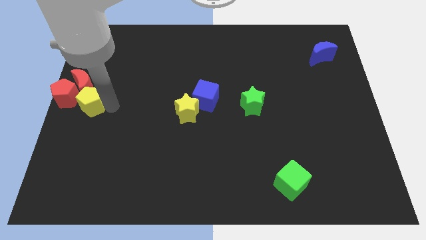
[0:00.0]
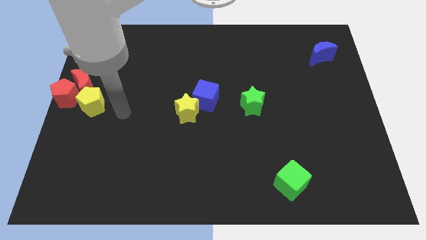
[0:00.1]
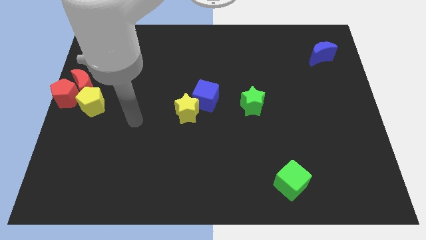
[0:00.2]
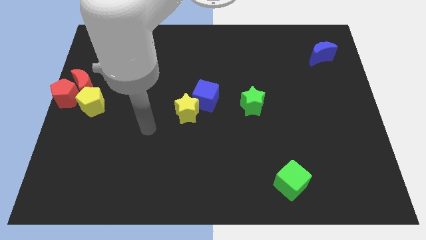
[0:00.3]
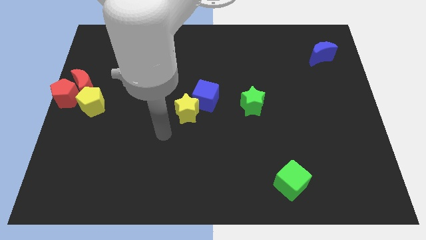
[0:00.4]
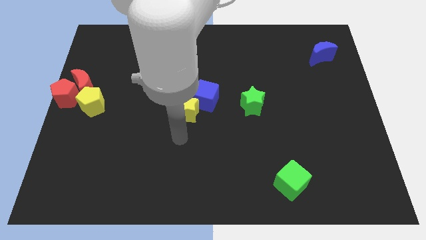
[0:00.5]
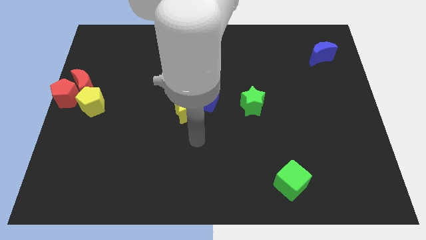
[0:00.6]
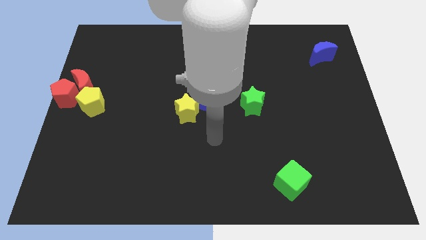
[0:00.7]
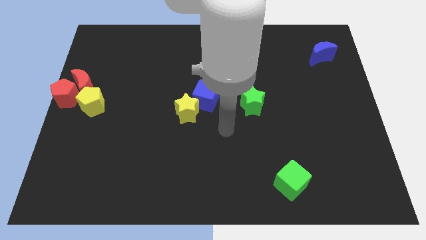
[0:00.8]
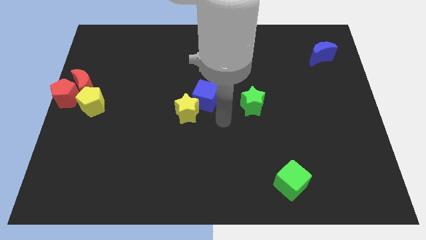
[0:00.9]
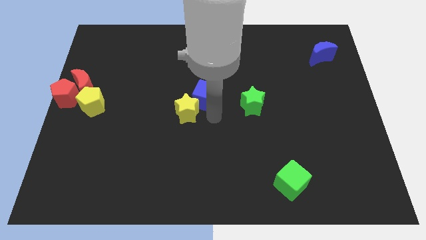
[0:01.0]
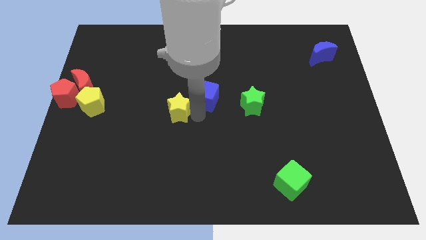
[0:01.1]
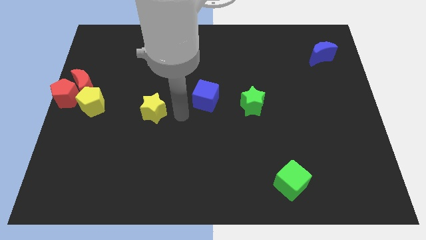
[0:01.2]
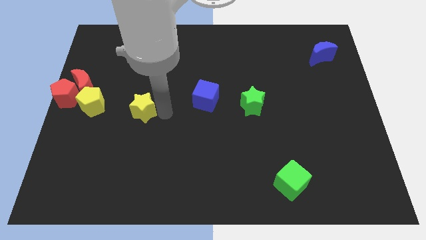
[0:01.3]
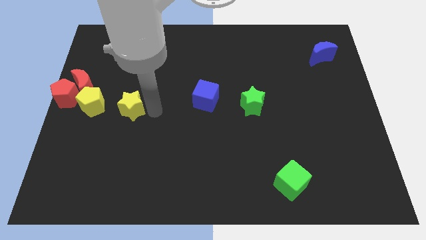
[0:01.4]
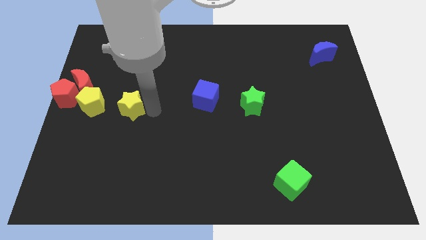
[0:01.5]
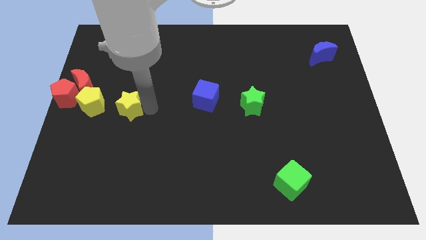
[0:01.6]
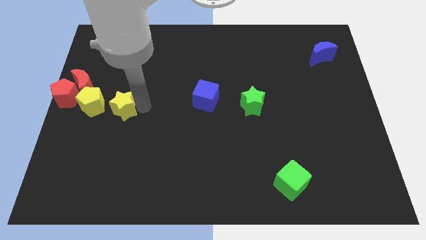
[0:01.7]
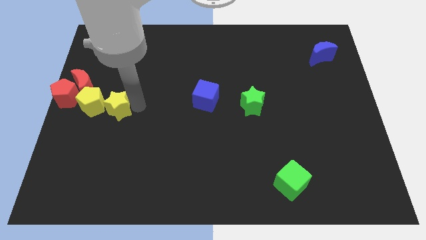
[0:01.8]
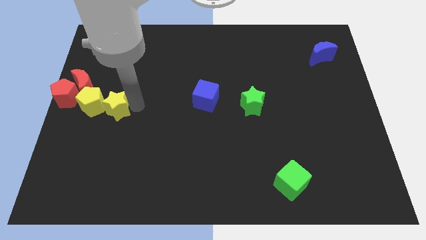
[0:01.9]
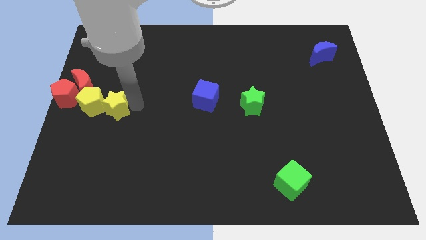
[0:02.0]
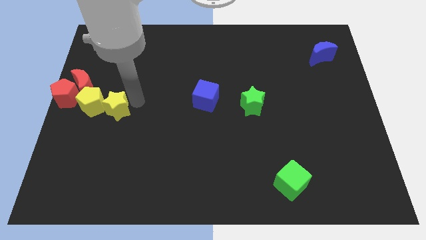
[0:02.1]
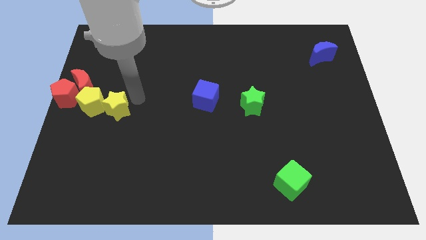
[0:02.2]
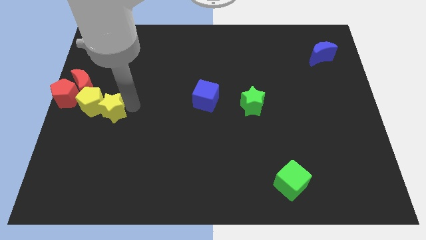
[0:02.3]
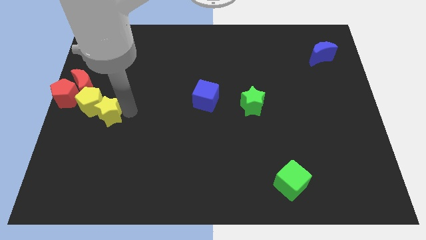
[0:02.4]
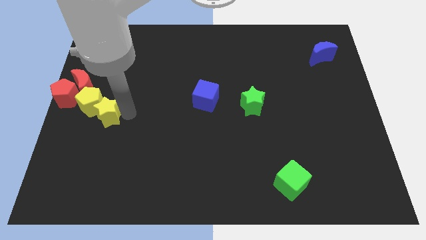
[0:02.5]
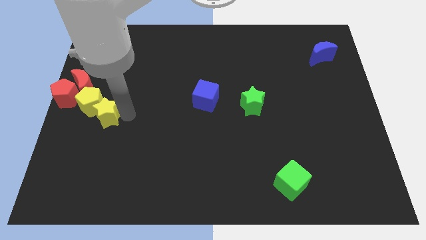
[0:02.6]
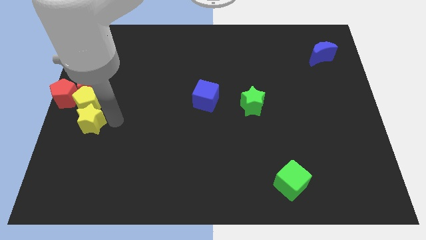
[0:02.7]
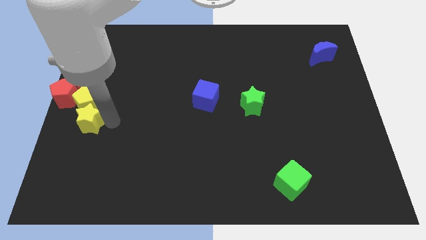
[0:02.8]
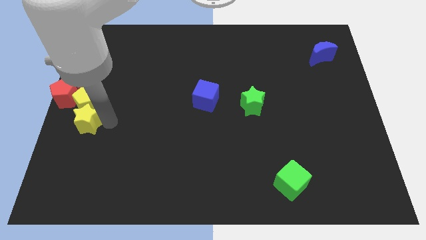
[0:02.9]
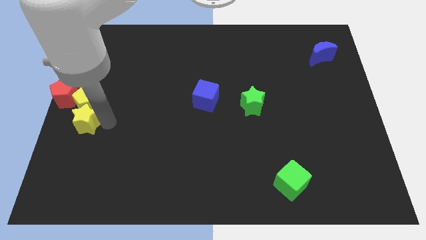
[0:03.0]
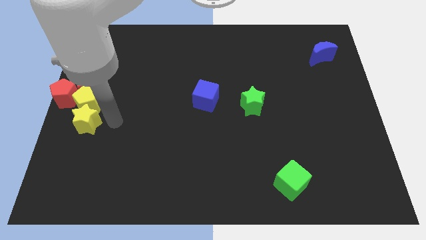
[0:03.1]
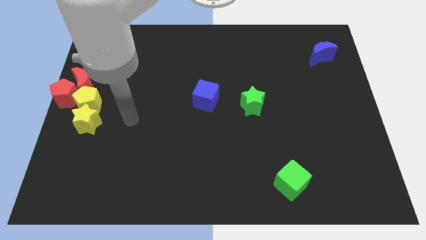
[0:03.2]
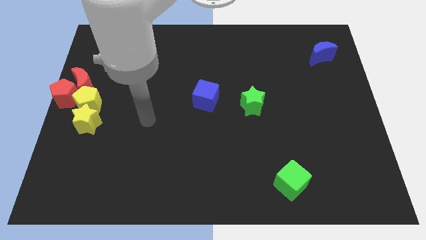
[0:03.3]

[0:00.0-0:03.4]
place the yellow star below the yellow pentagon

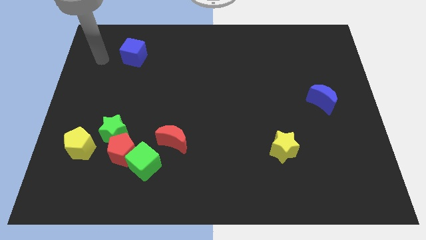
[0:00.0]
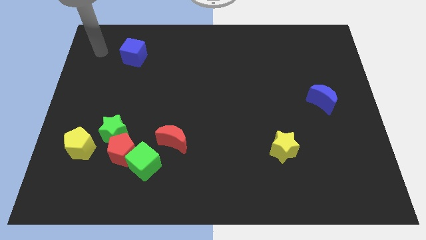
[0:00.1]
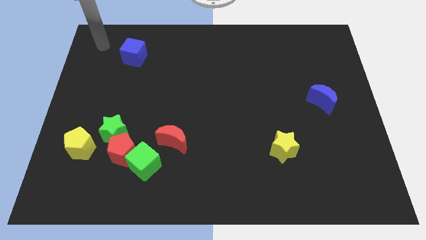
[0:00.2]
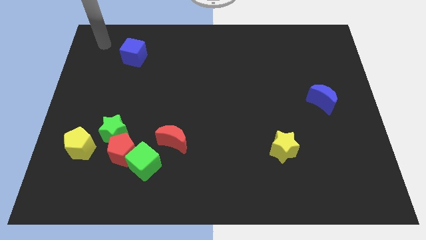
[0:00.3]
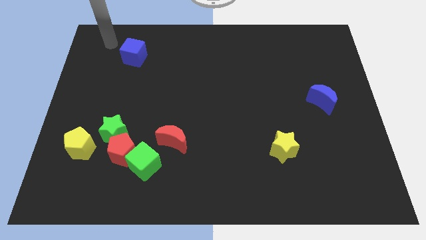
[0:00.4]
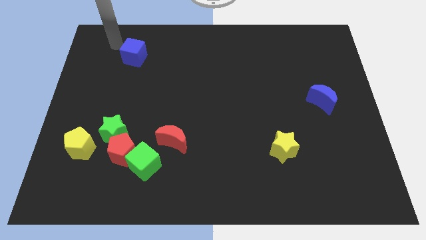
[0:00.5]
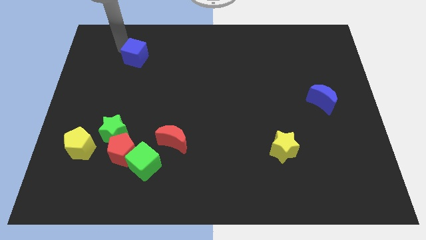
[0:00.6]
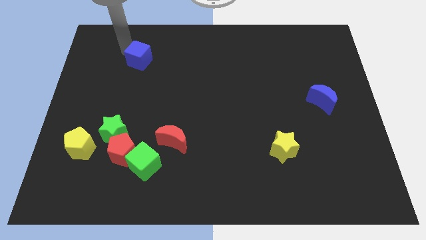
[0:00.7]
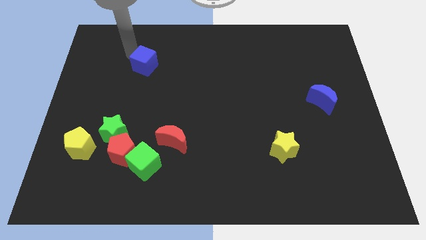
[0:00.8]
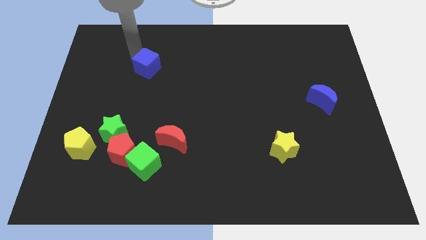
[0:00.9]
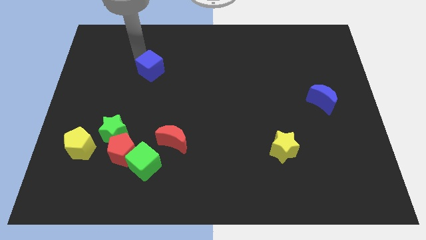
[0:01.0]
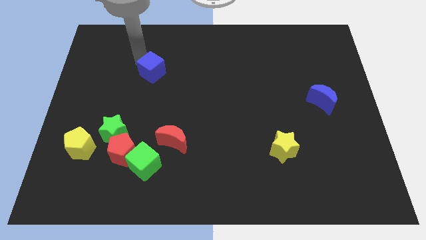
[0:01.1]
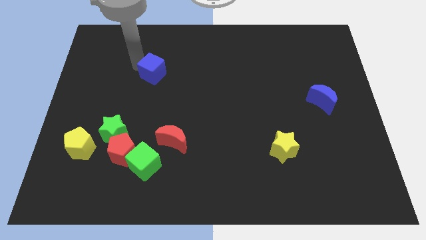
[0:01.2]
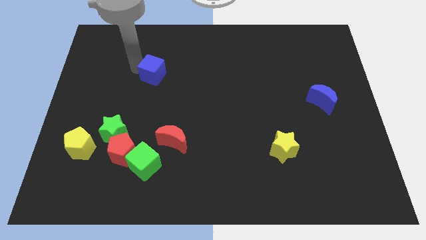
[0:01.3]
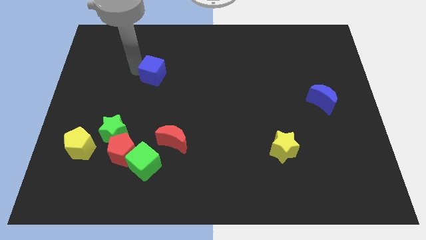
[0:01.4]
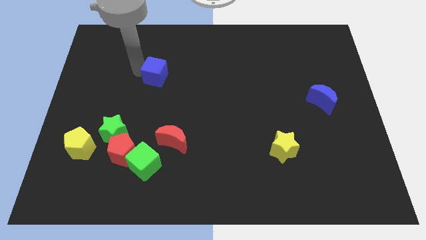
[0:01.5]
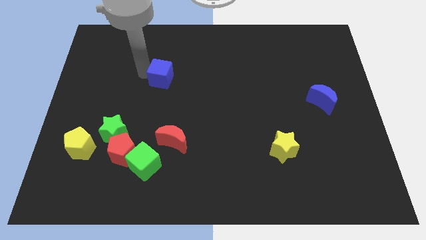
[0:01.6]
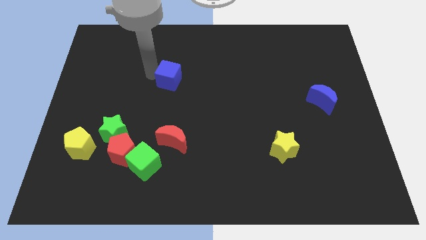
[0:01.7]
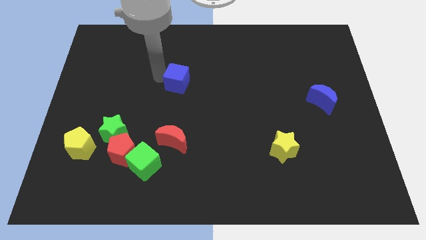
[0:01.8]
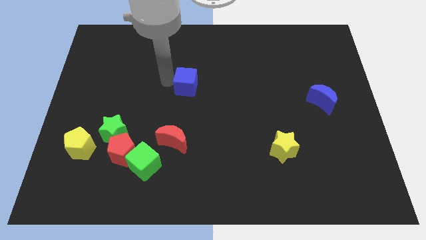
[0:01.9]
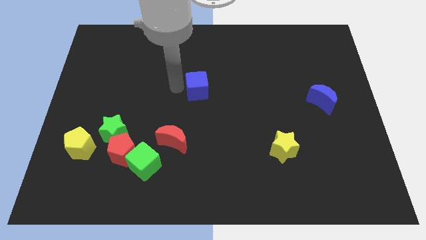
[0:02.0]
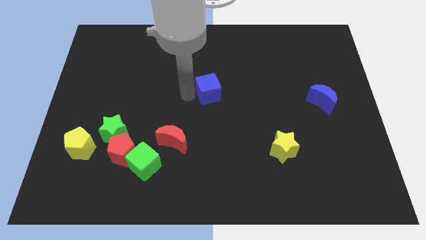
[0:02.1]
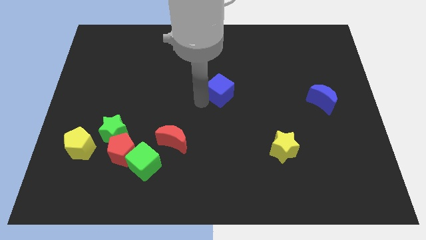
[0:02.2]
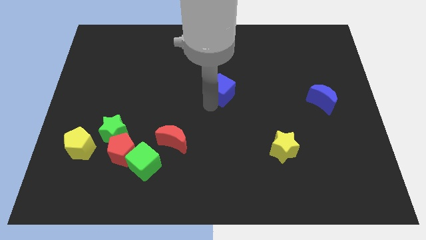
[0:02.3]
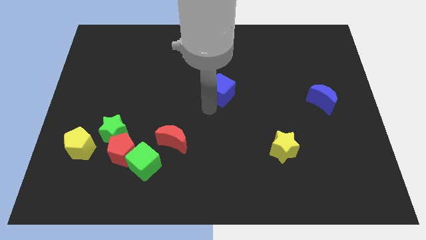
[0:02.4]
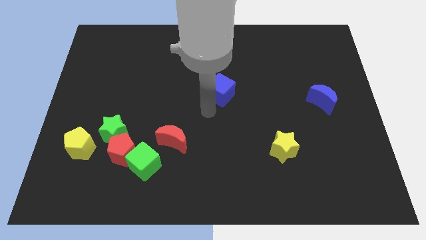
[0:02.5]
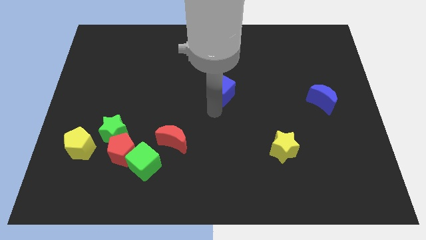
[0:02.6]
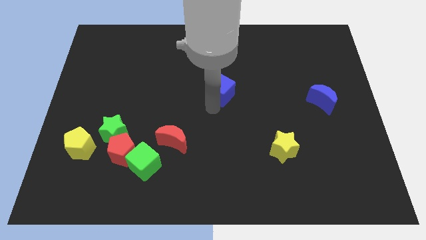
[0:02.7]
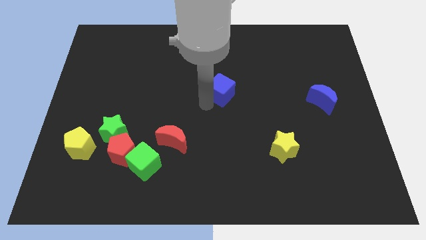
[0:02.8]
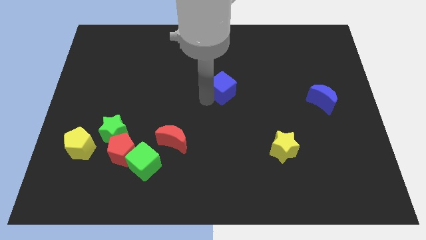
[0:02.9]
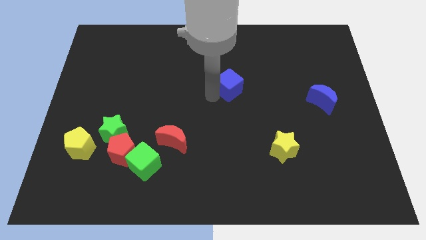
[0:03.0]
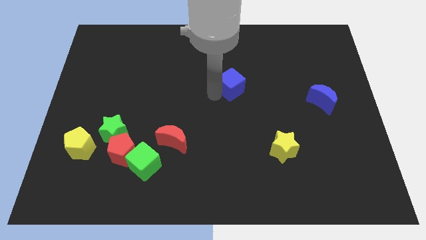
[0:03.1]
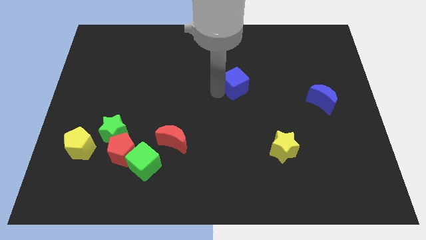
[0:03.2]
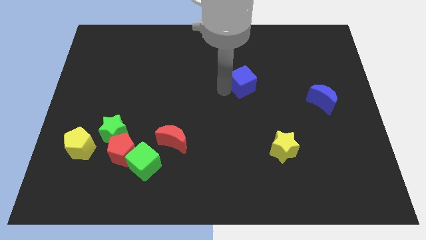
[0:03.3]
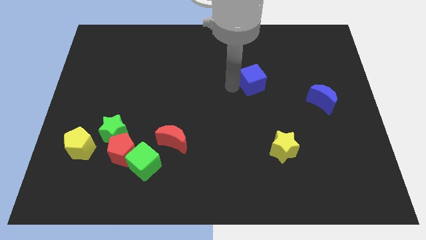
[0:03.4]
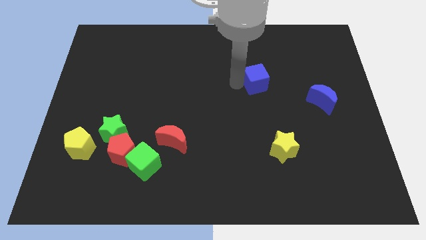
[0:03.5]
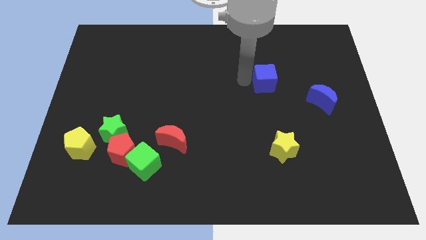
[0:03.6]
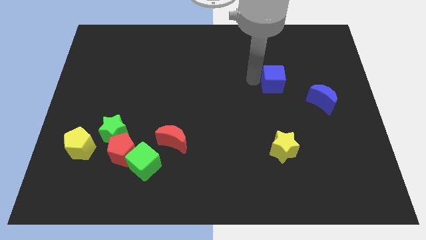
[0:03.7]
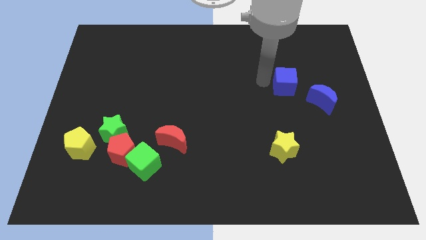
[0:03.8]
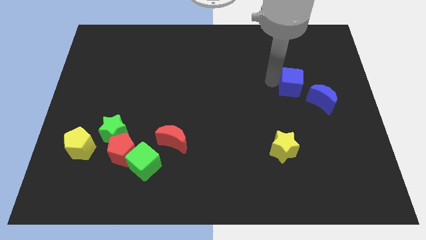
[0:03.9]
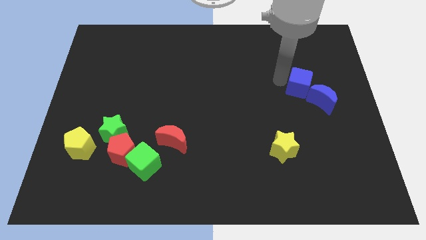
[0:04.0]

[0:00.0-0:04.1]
place blue cube into blue moon

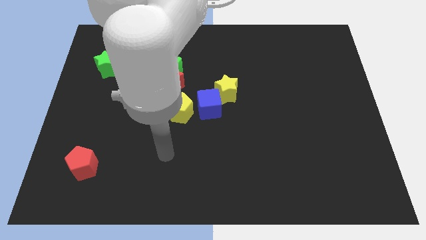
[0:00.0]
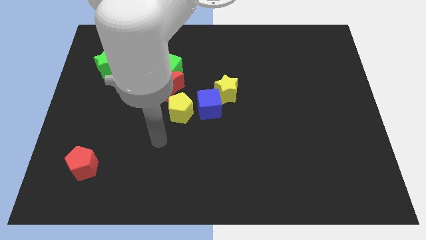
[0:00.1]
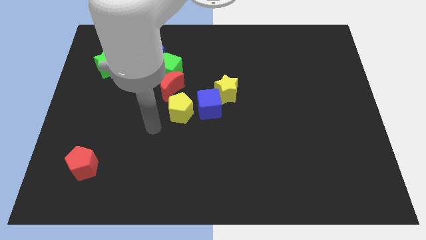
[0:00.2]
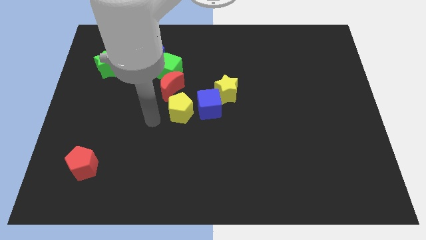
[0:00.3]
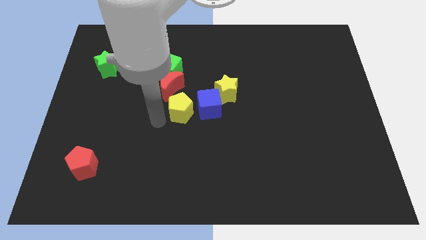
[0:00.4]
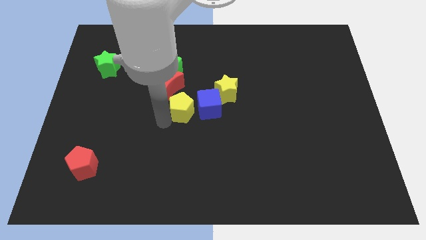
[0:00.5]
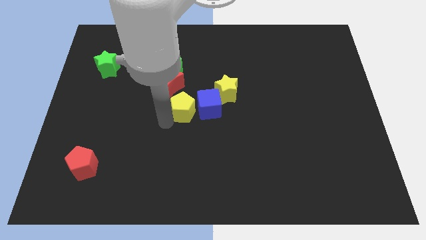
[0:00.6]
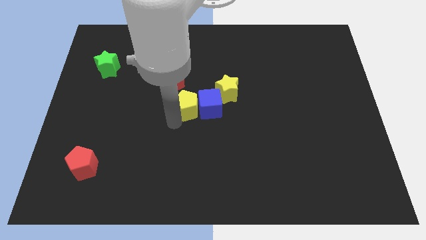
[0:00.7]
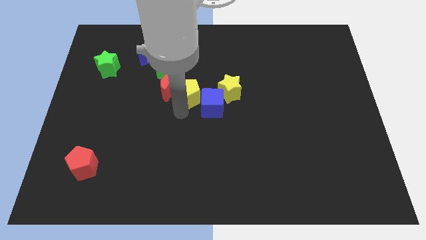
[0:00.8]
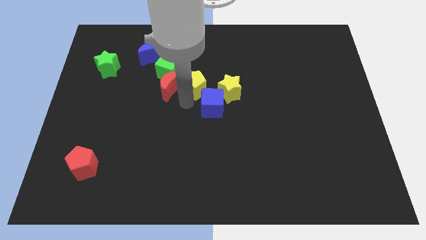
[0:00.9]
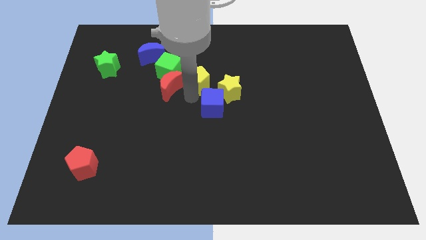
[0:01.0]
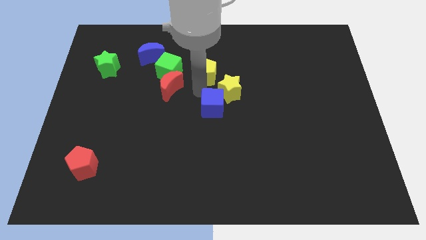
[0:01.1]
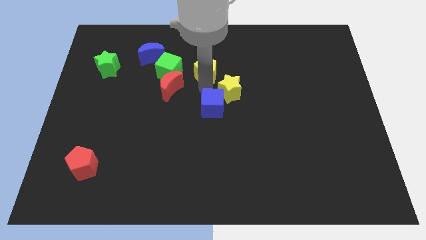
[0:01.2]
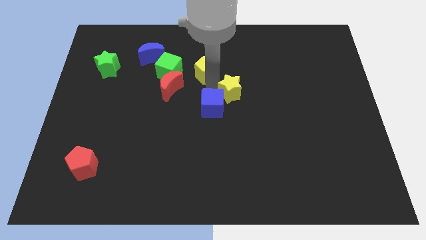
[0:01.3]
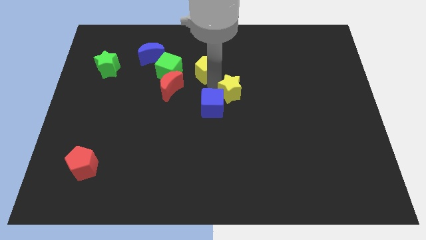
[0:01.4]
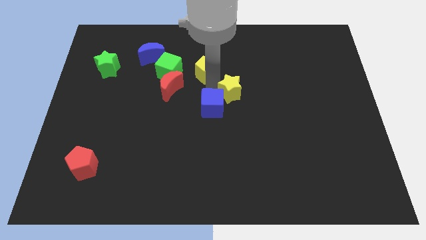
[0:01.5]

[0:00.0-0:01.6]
place the yellow pentagon to the right of the green cube
